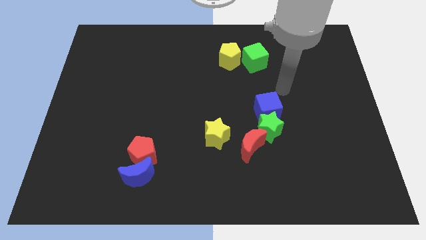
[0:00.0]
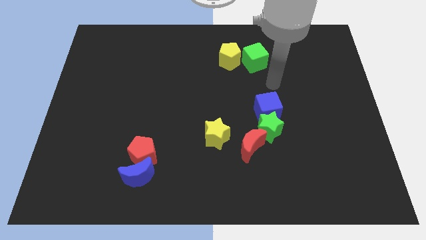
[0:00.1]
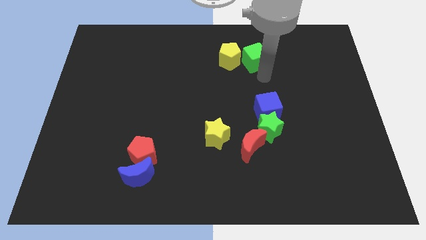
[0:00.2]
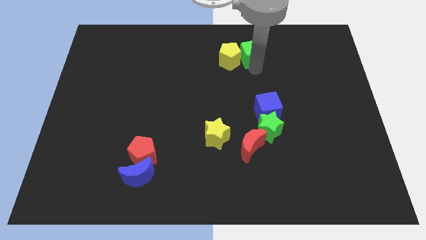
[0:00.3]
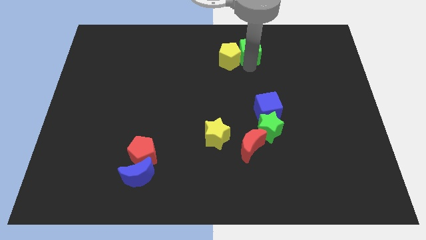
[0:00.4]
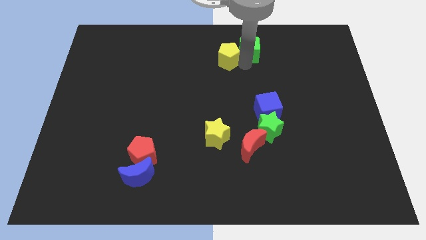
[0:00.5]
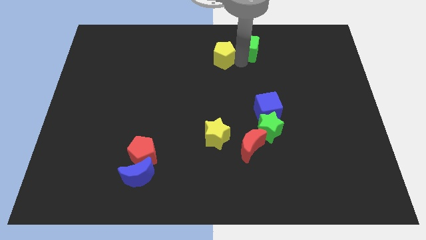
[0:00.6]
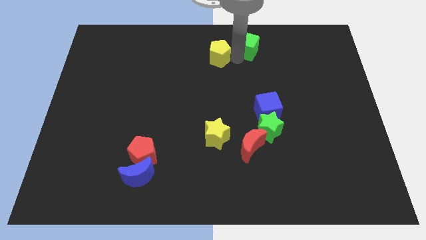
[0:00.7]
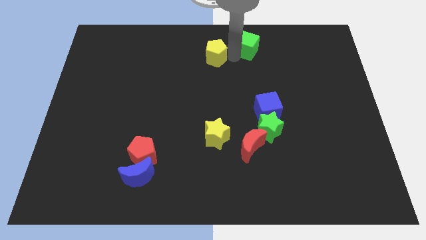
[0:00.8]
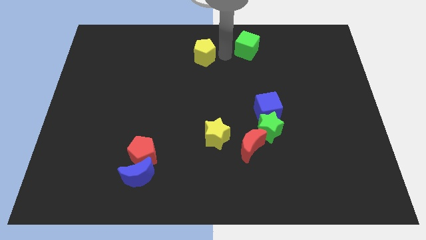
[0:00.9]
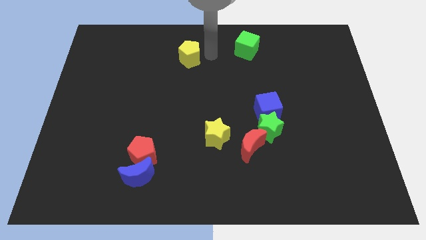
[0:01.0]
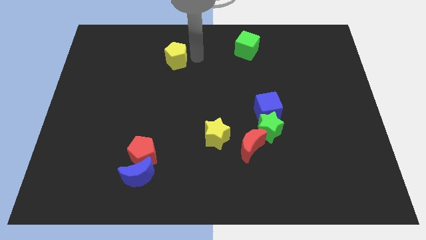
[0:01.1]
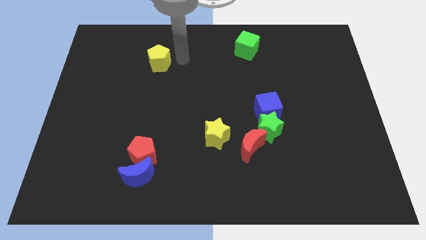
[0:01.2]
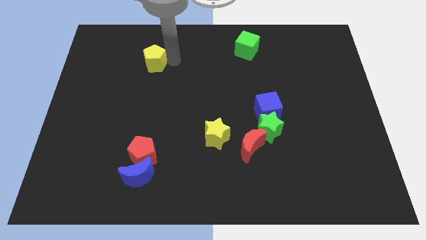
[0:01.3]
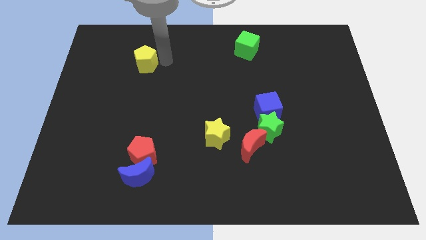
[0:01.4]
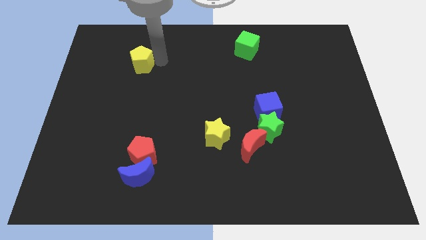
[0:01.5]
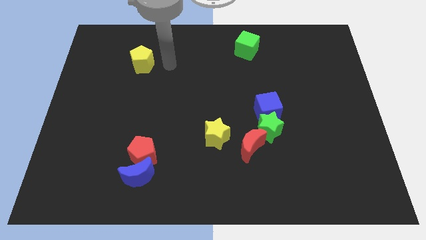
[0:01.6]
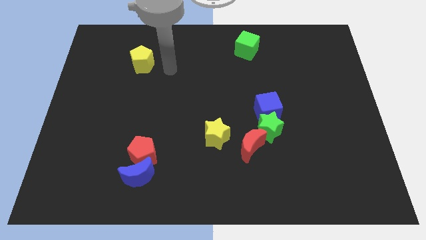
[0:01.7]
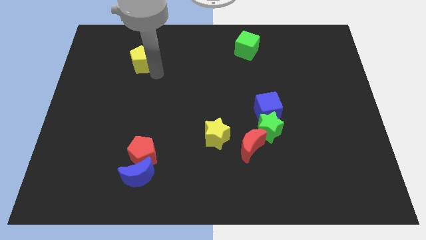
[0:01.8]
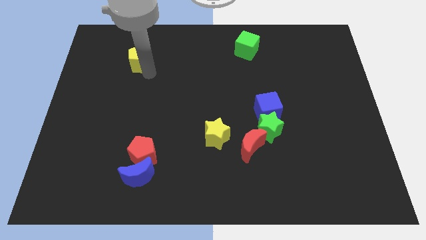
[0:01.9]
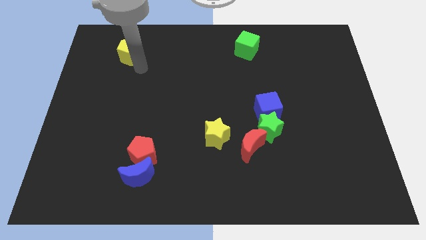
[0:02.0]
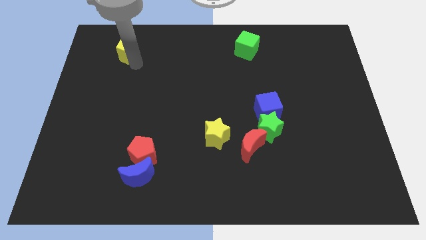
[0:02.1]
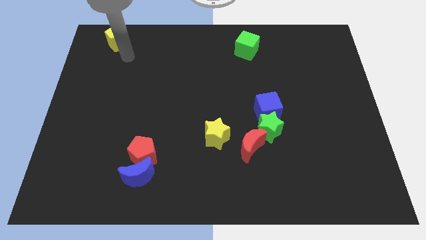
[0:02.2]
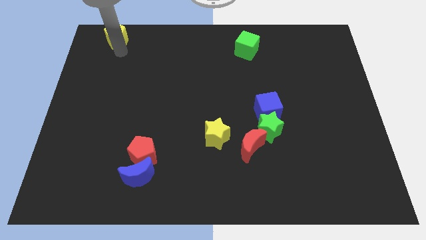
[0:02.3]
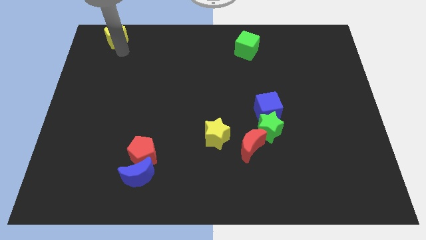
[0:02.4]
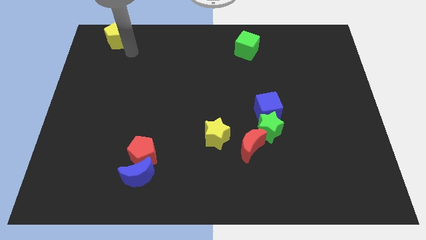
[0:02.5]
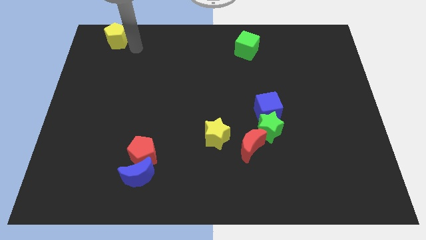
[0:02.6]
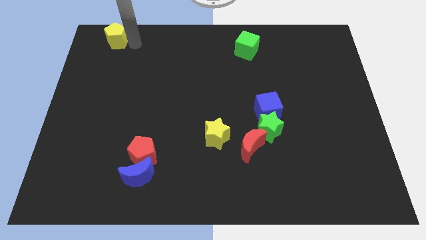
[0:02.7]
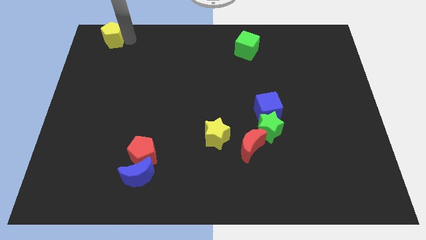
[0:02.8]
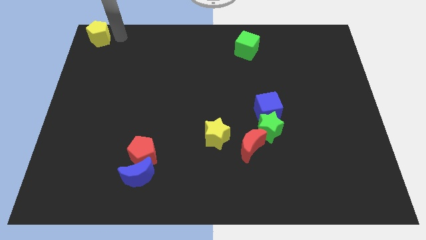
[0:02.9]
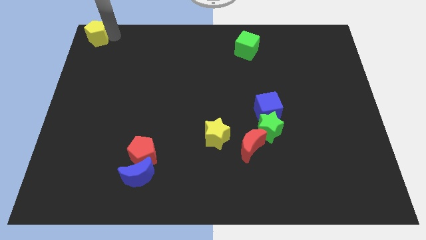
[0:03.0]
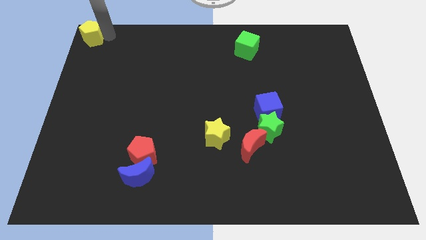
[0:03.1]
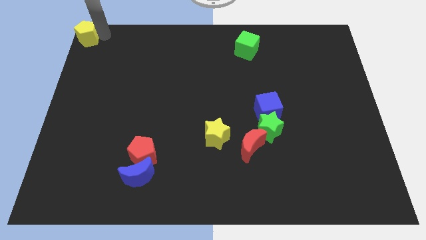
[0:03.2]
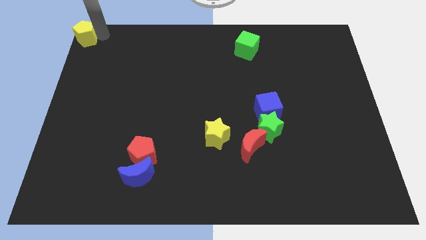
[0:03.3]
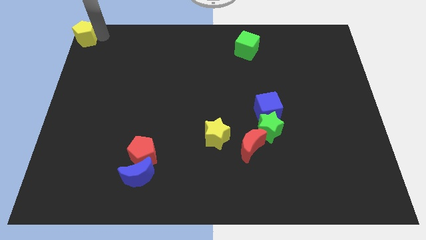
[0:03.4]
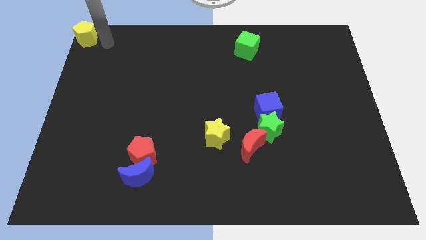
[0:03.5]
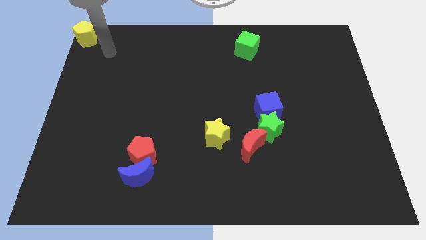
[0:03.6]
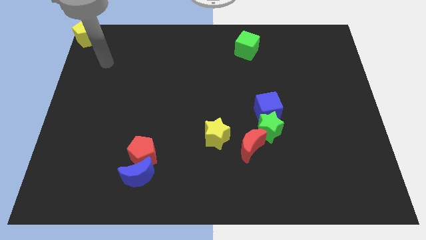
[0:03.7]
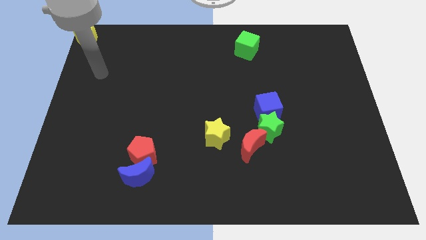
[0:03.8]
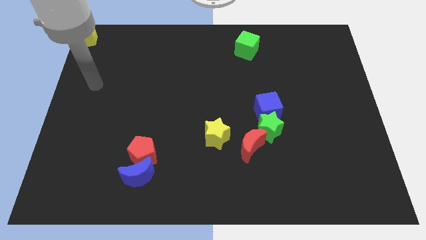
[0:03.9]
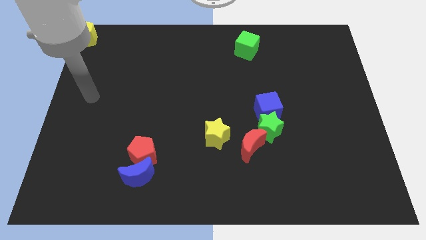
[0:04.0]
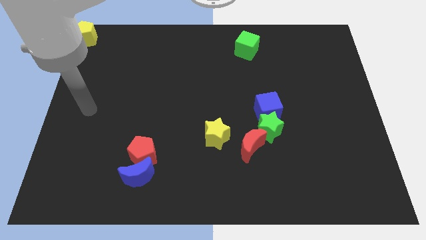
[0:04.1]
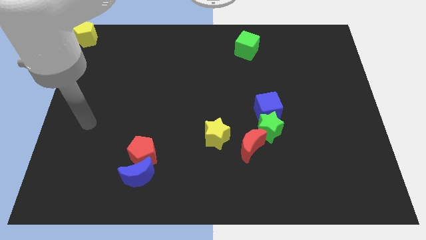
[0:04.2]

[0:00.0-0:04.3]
move the yellow pentagon to the top left

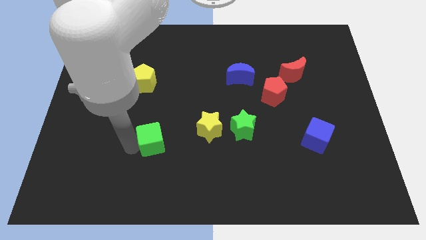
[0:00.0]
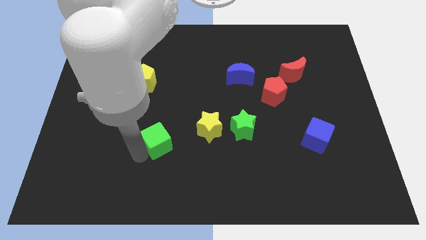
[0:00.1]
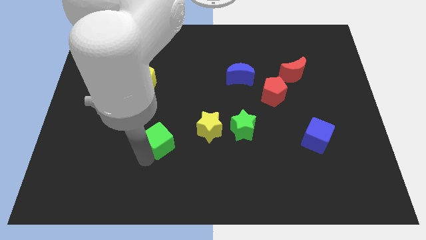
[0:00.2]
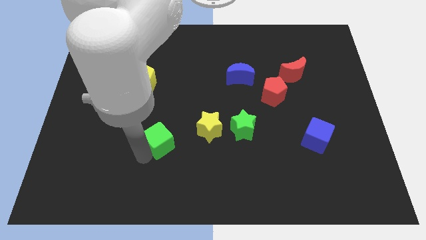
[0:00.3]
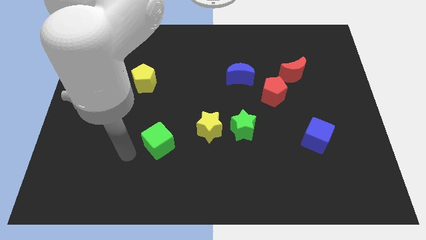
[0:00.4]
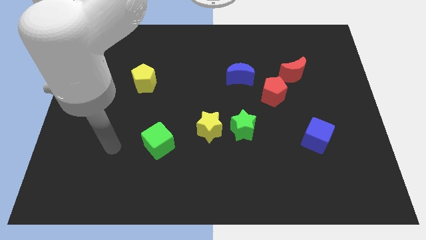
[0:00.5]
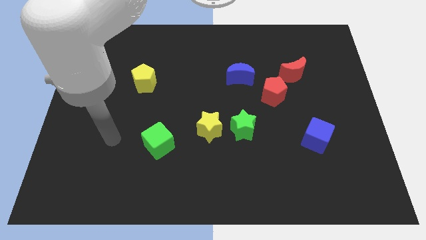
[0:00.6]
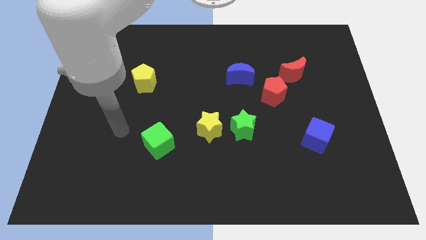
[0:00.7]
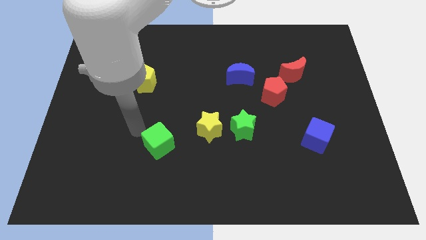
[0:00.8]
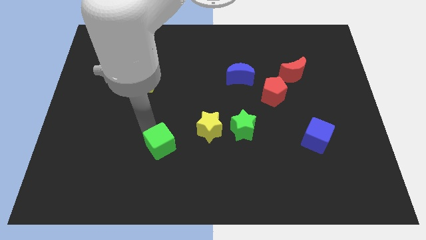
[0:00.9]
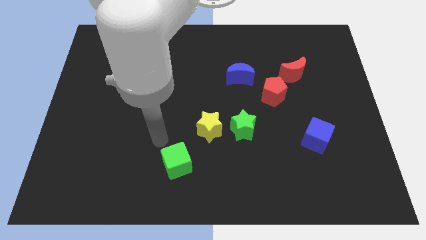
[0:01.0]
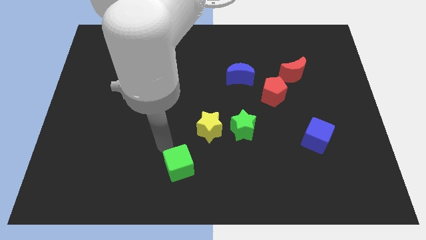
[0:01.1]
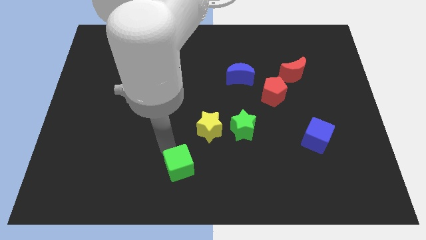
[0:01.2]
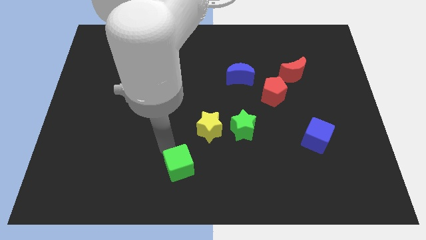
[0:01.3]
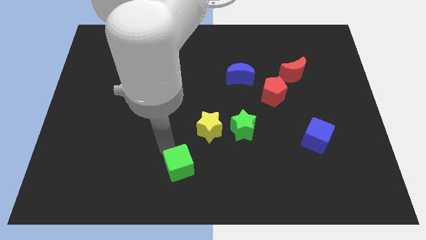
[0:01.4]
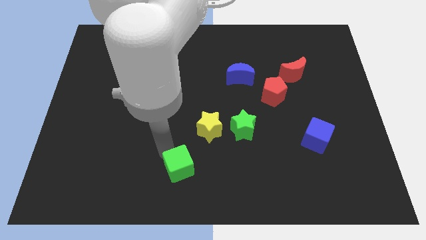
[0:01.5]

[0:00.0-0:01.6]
move the green cube towards bottom center

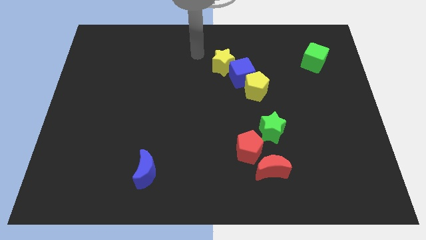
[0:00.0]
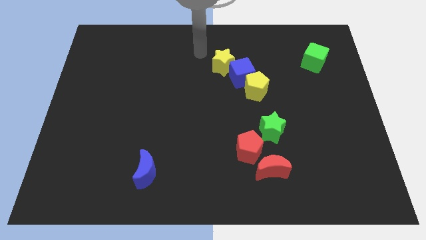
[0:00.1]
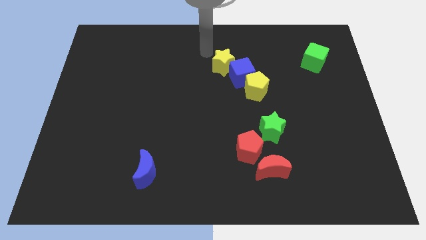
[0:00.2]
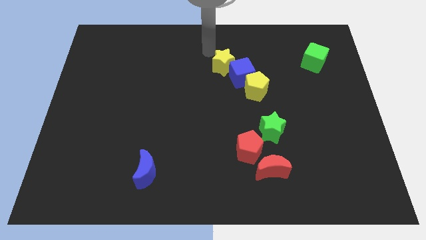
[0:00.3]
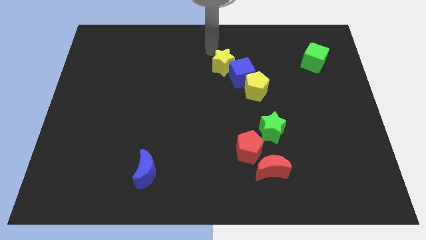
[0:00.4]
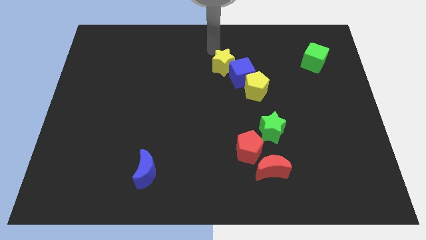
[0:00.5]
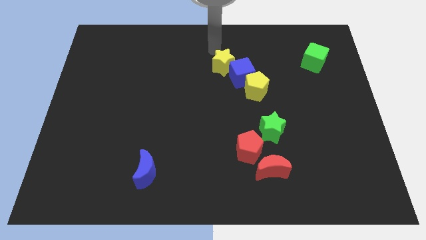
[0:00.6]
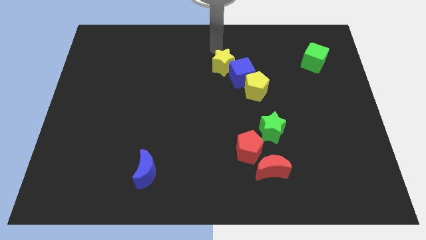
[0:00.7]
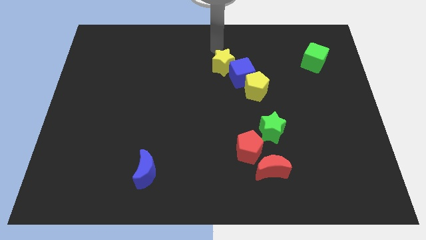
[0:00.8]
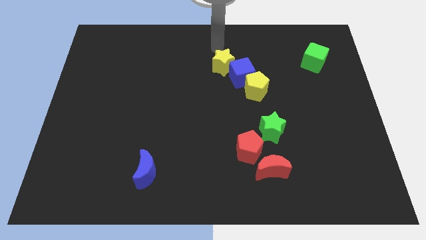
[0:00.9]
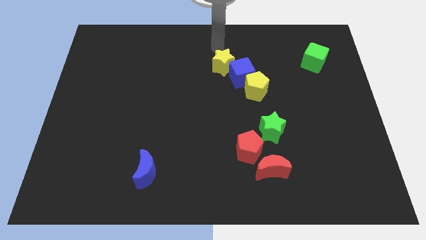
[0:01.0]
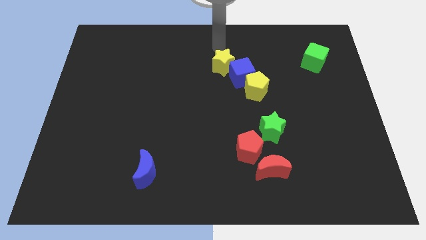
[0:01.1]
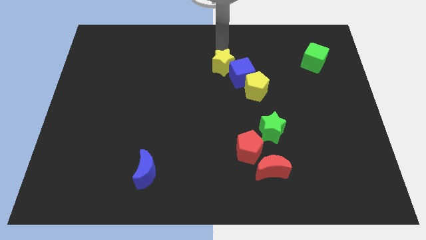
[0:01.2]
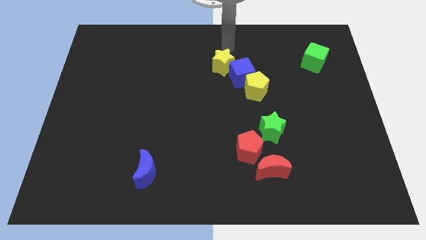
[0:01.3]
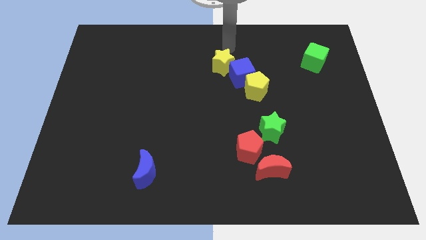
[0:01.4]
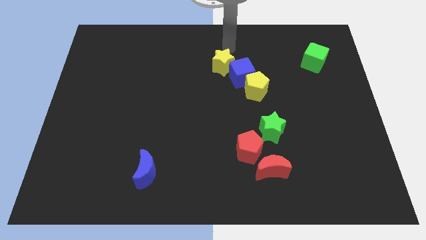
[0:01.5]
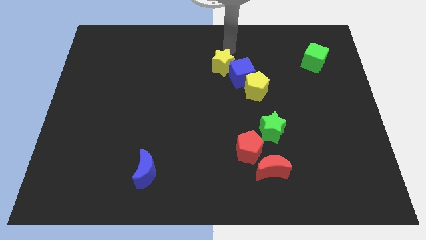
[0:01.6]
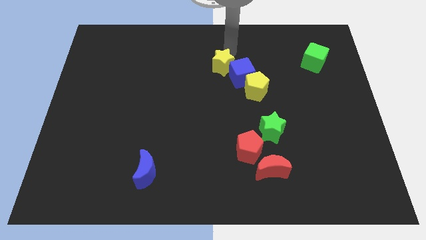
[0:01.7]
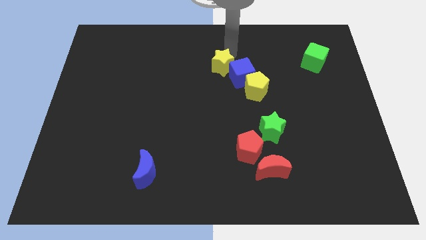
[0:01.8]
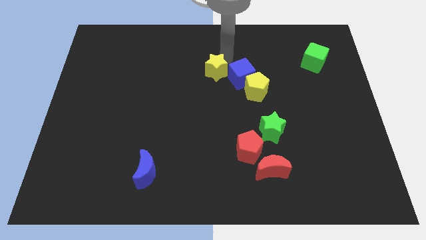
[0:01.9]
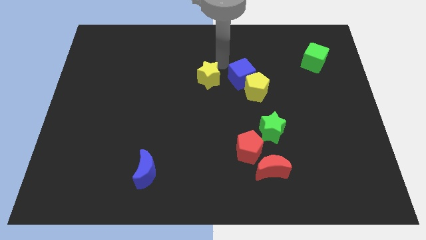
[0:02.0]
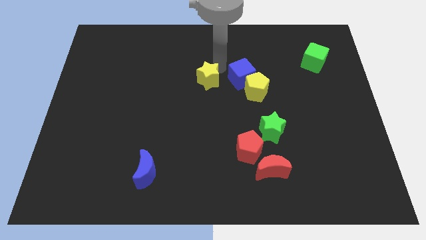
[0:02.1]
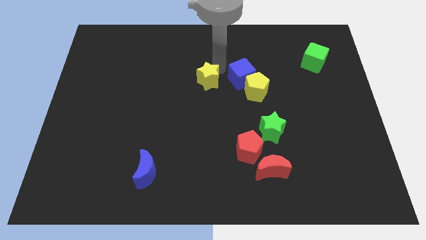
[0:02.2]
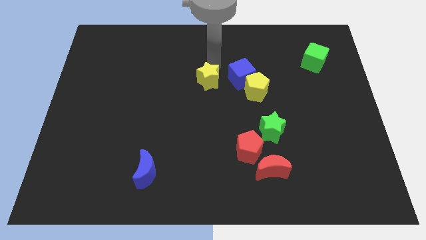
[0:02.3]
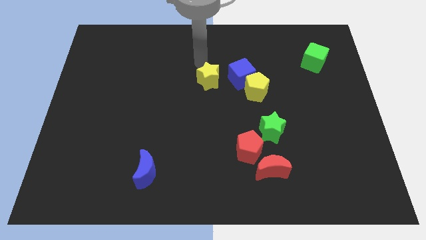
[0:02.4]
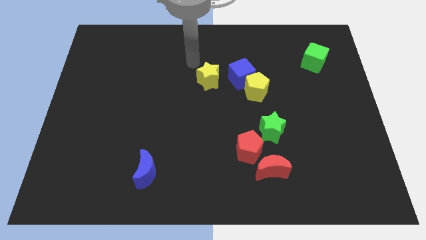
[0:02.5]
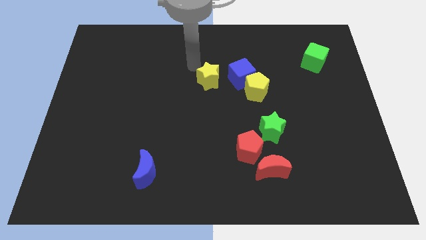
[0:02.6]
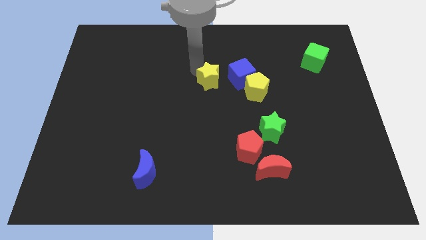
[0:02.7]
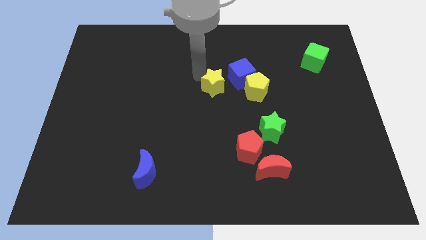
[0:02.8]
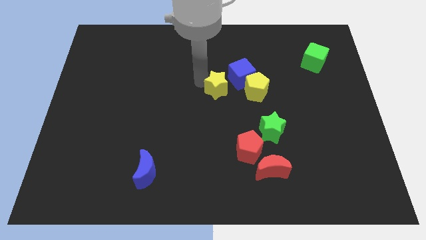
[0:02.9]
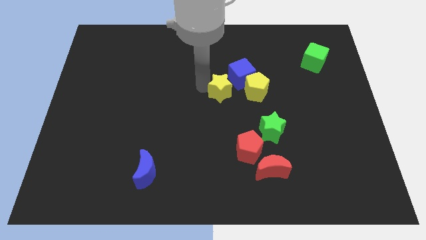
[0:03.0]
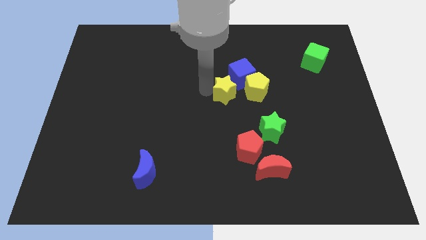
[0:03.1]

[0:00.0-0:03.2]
place the yellow star at the bottom left of the blue cube
